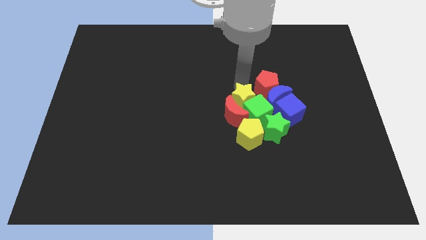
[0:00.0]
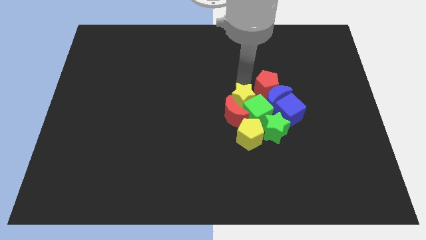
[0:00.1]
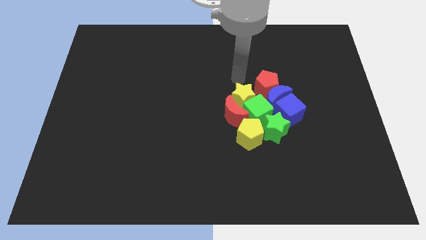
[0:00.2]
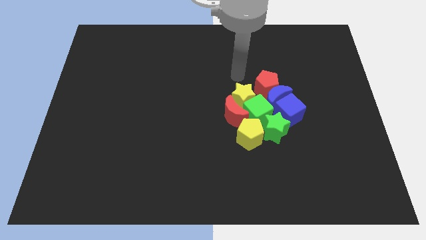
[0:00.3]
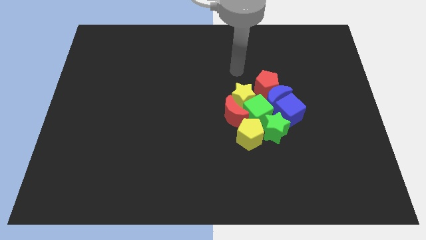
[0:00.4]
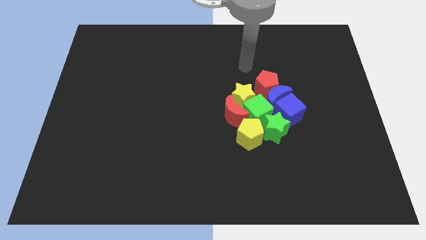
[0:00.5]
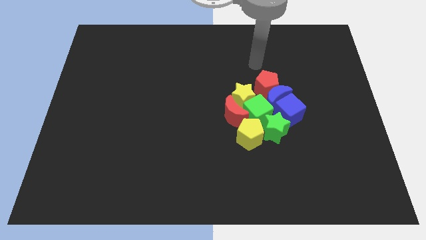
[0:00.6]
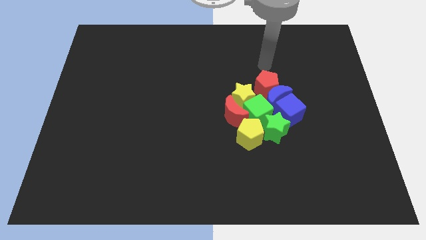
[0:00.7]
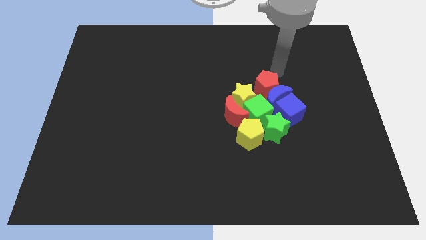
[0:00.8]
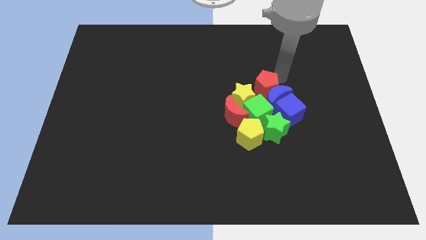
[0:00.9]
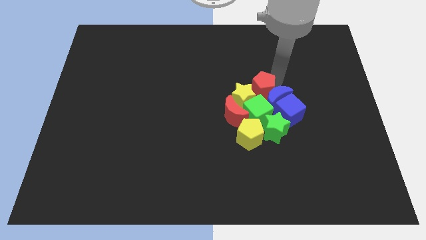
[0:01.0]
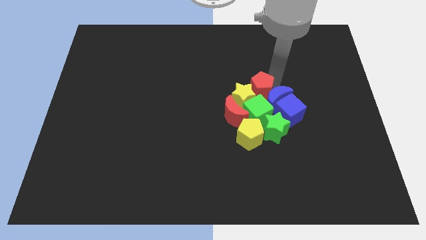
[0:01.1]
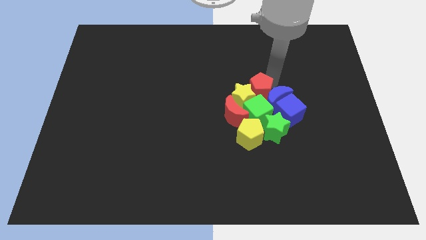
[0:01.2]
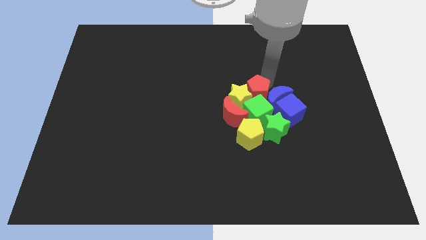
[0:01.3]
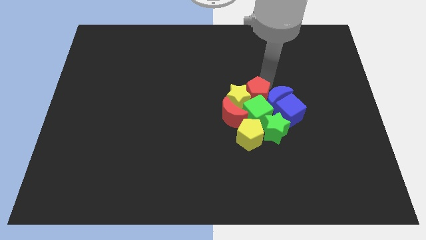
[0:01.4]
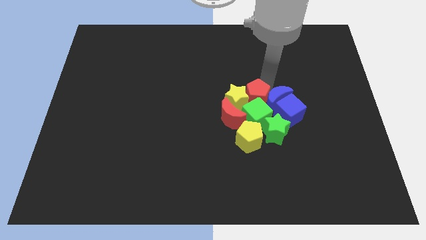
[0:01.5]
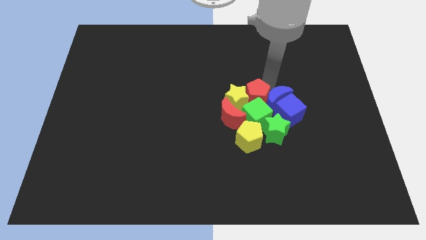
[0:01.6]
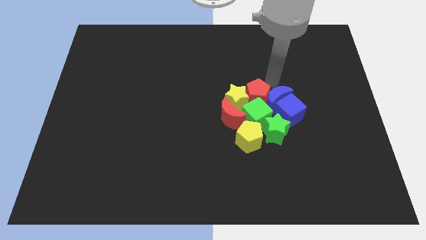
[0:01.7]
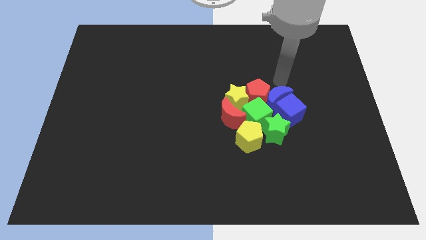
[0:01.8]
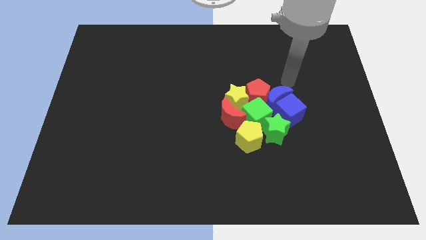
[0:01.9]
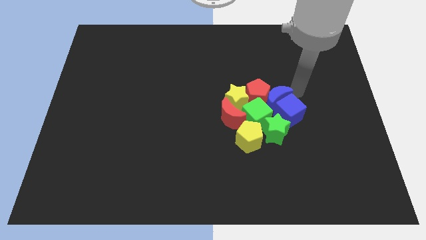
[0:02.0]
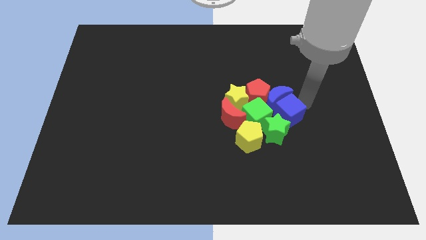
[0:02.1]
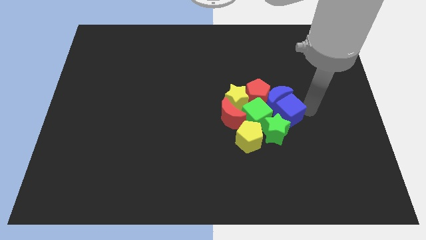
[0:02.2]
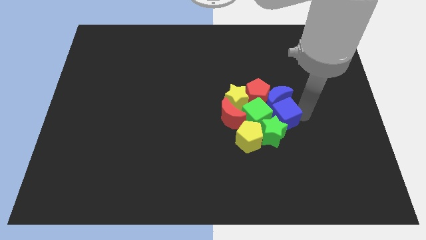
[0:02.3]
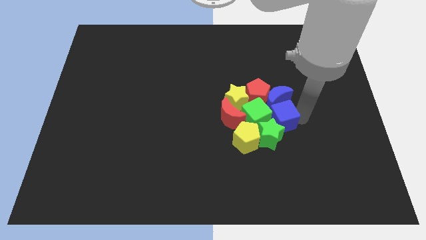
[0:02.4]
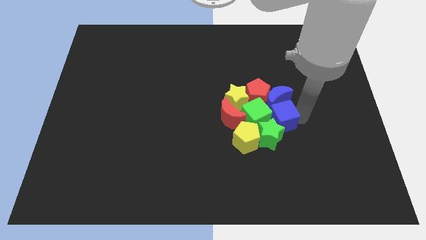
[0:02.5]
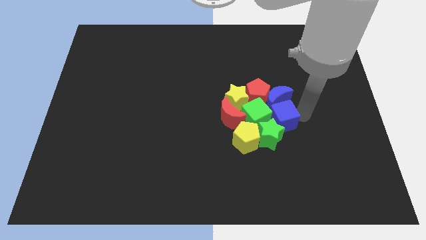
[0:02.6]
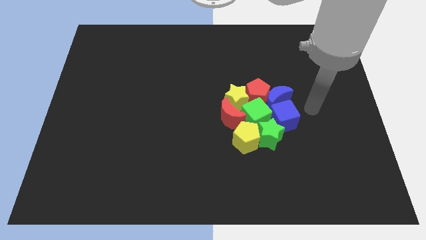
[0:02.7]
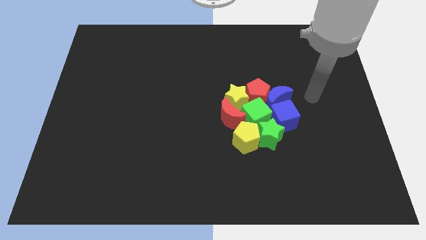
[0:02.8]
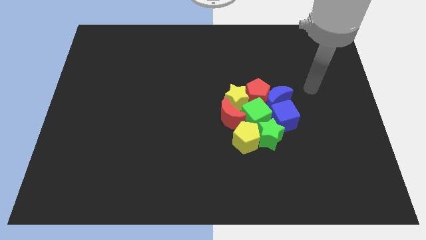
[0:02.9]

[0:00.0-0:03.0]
adjust the group of blocks

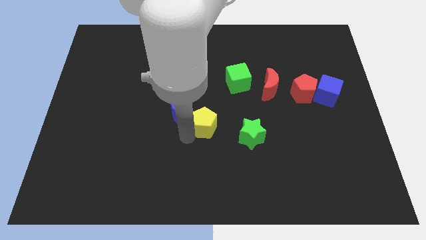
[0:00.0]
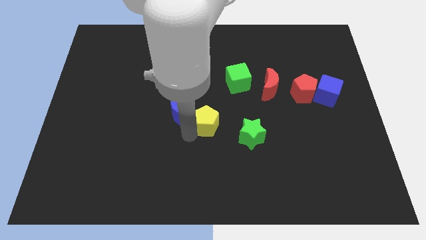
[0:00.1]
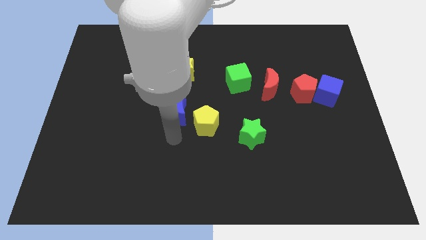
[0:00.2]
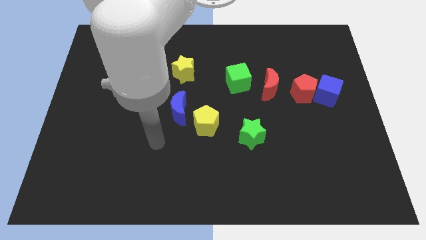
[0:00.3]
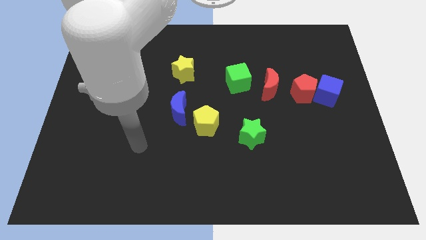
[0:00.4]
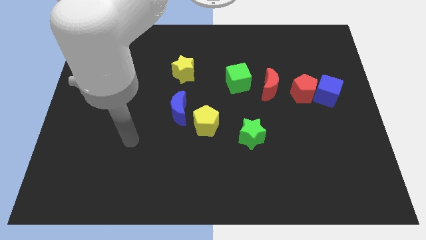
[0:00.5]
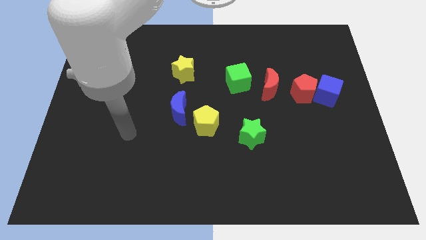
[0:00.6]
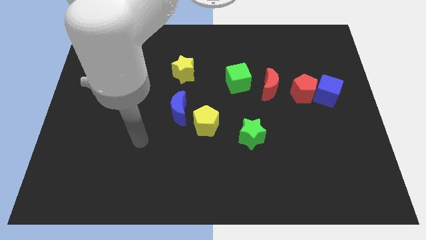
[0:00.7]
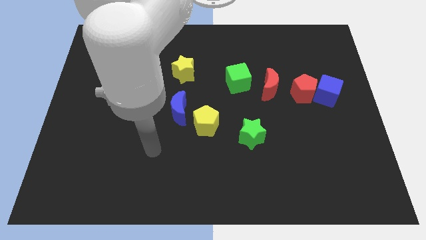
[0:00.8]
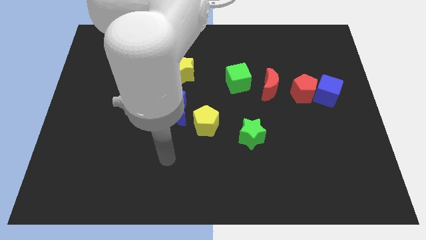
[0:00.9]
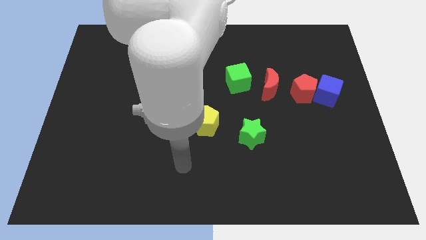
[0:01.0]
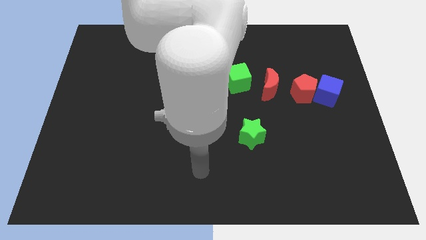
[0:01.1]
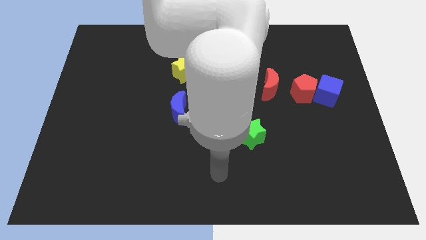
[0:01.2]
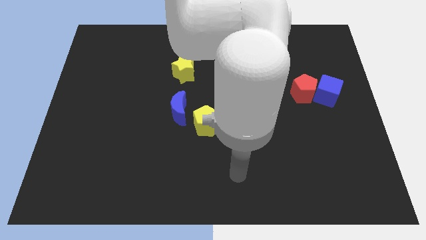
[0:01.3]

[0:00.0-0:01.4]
slide the yellow pentagon diagonally to the green star

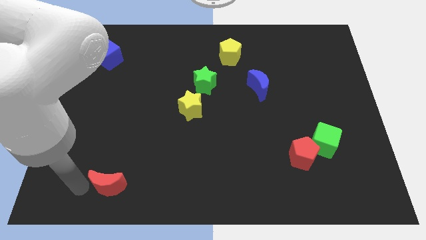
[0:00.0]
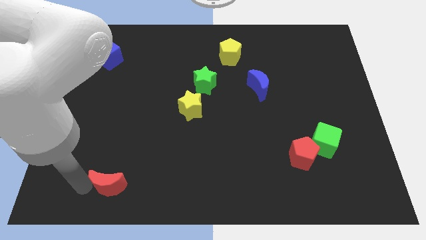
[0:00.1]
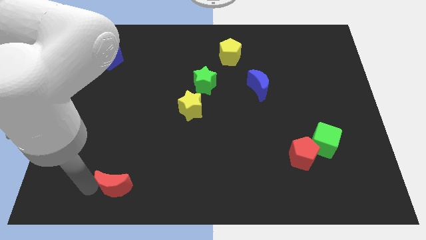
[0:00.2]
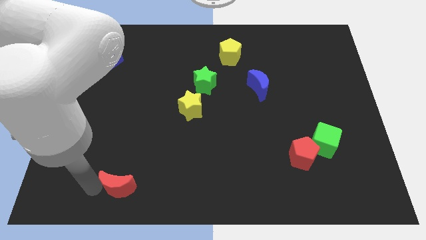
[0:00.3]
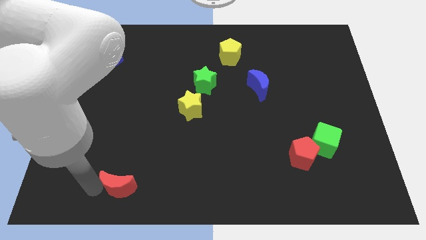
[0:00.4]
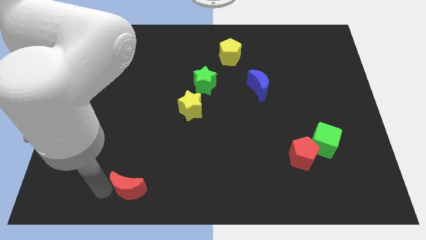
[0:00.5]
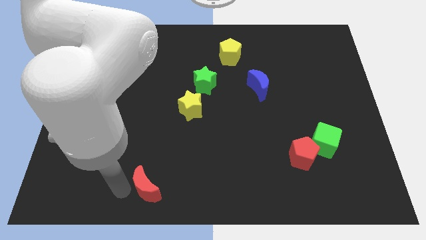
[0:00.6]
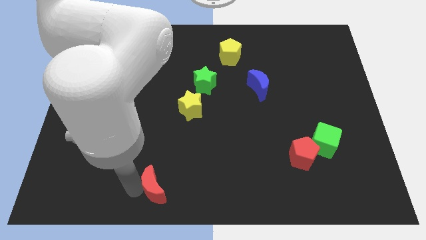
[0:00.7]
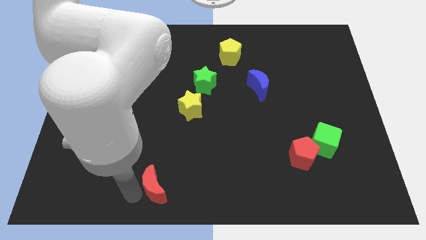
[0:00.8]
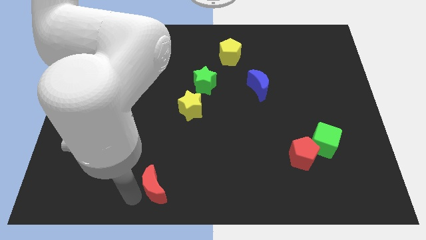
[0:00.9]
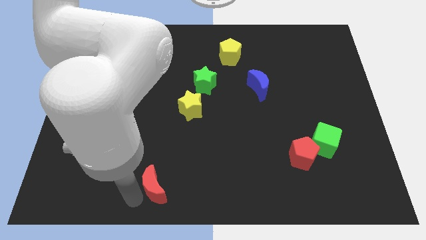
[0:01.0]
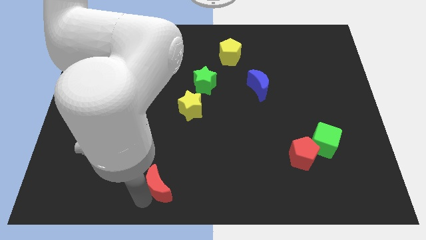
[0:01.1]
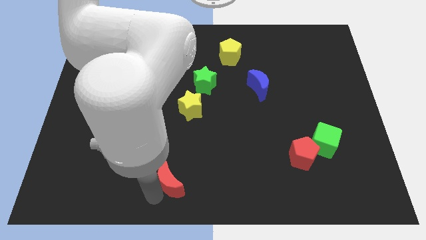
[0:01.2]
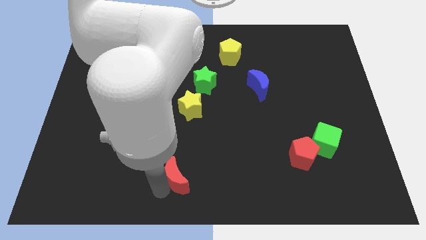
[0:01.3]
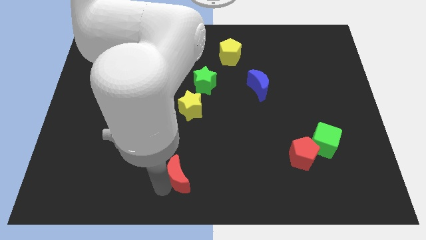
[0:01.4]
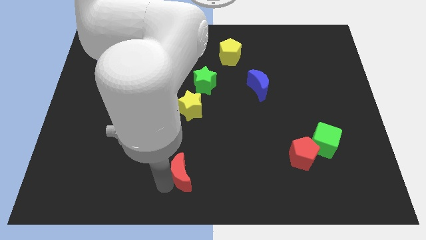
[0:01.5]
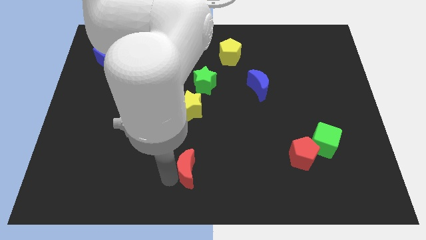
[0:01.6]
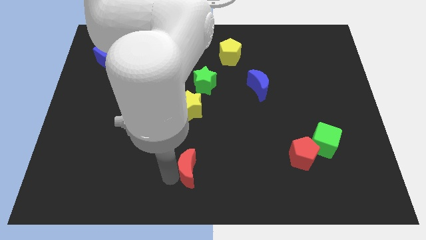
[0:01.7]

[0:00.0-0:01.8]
place the red moon below the yellow star

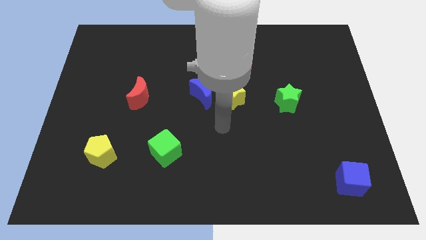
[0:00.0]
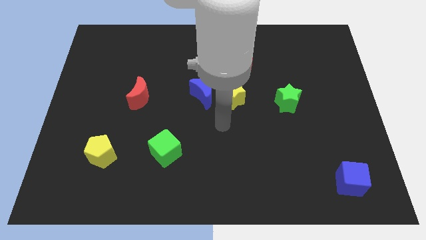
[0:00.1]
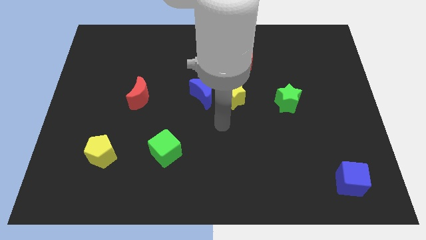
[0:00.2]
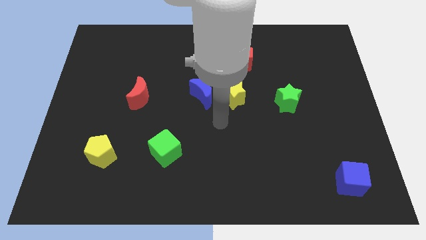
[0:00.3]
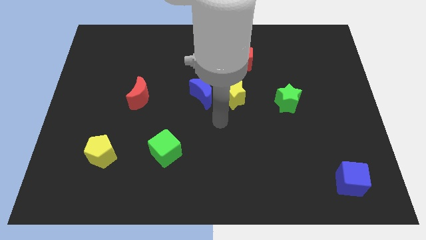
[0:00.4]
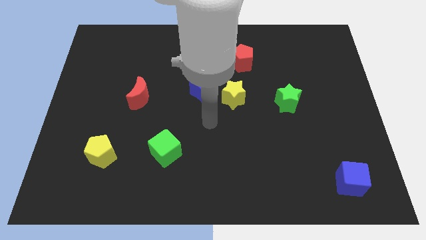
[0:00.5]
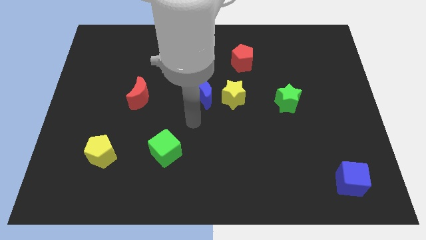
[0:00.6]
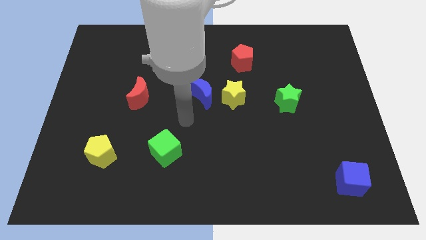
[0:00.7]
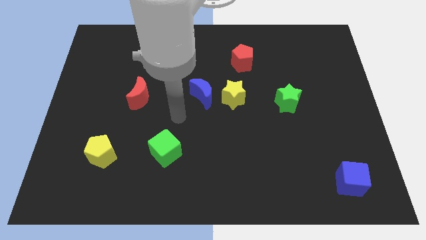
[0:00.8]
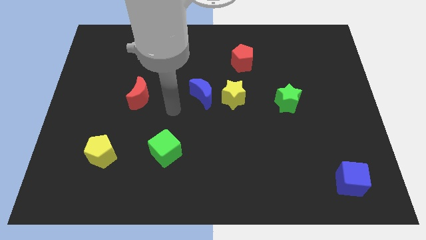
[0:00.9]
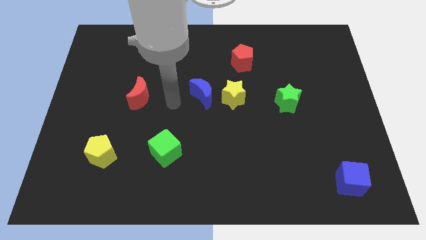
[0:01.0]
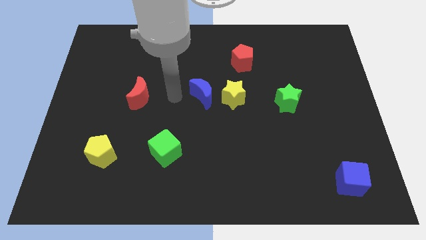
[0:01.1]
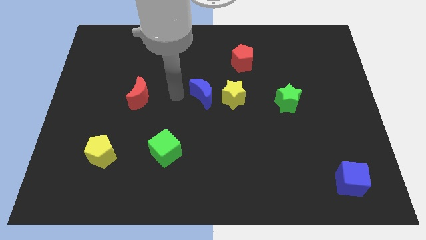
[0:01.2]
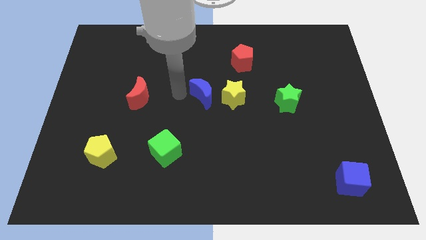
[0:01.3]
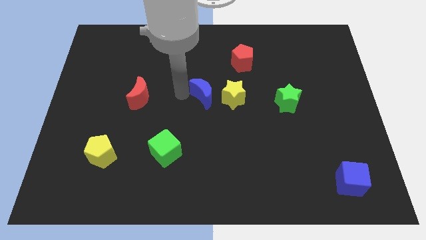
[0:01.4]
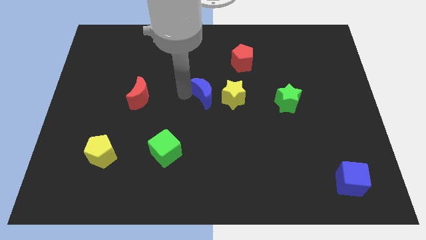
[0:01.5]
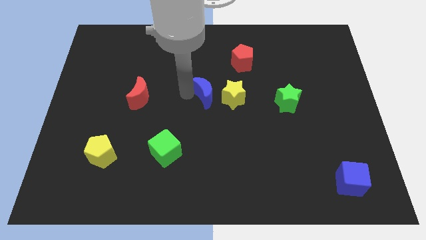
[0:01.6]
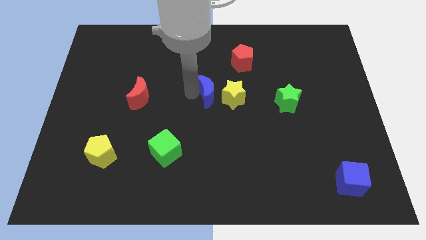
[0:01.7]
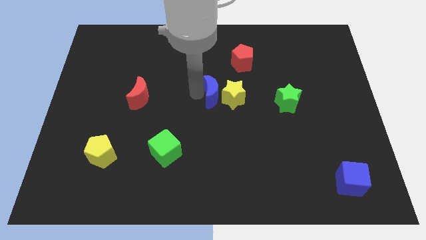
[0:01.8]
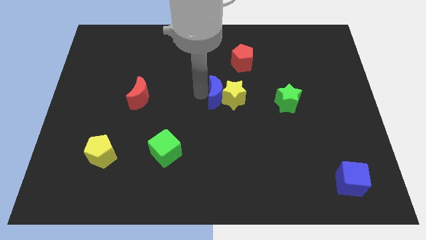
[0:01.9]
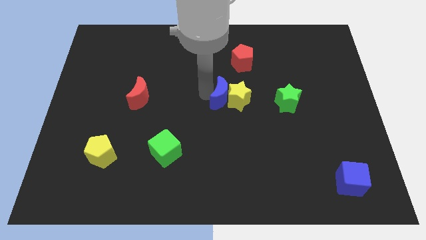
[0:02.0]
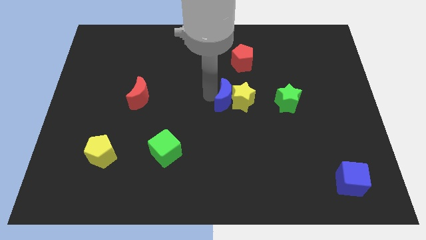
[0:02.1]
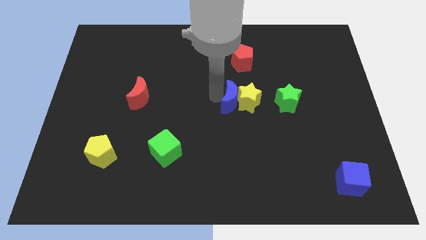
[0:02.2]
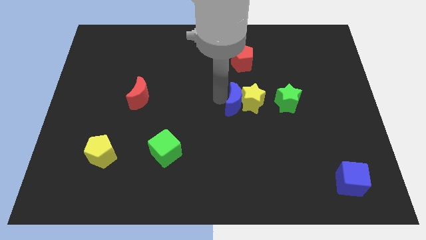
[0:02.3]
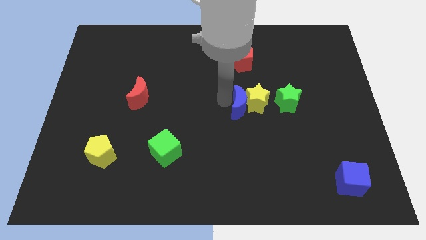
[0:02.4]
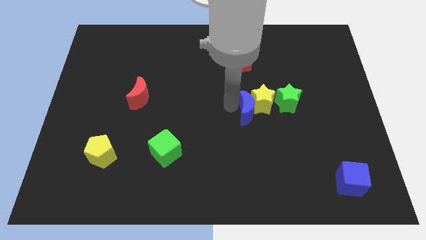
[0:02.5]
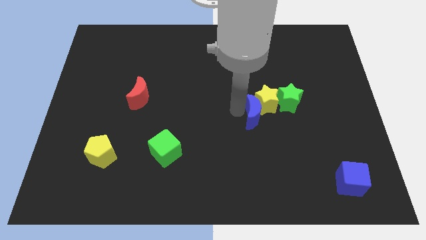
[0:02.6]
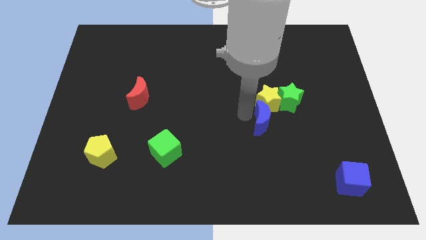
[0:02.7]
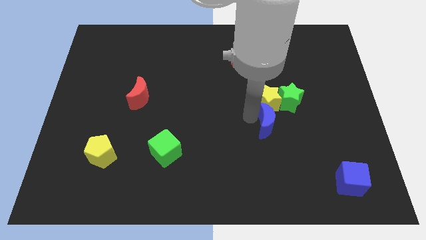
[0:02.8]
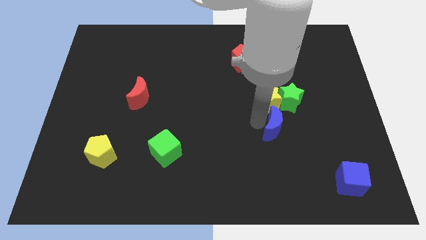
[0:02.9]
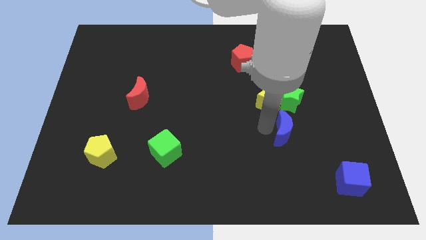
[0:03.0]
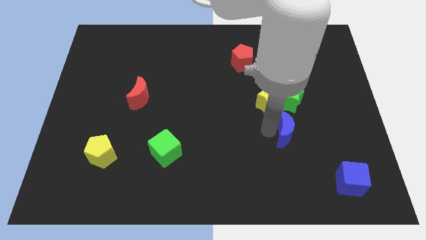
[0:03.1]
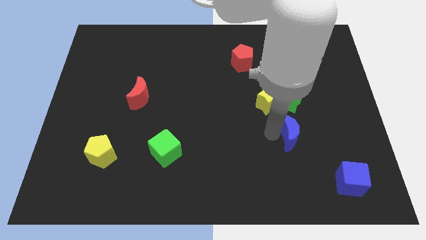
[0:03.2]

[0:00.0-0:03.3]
drag blue moon diagonally bottom right to the yellow star
